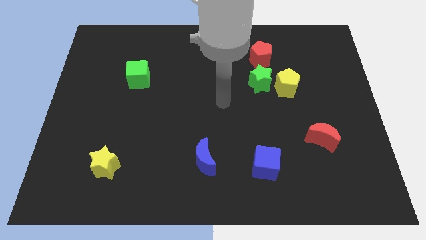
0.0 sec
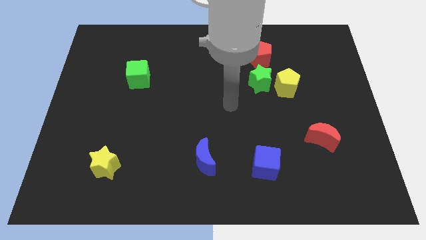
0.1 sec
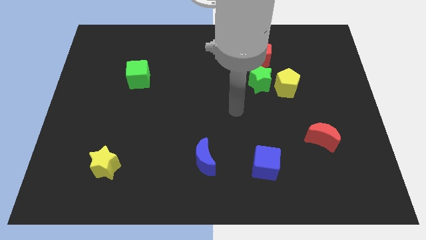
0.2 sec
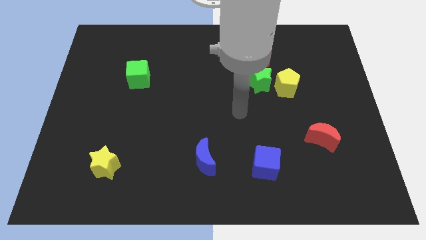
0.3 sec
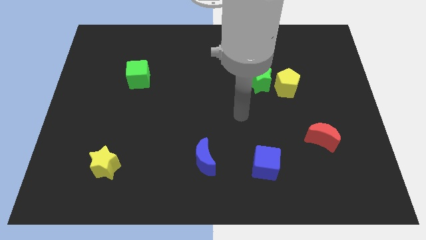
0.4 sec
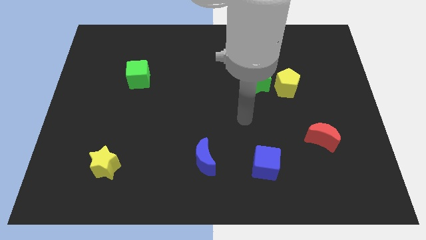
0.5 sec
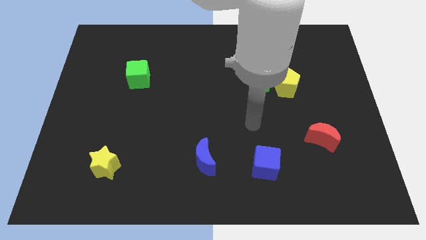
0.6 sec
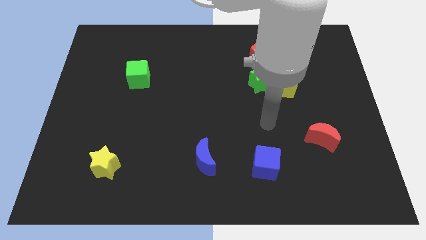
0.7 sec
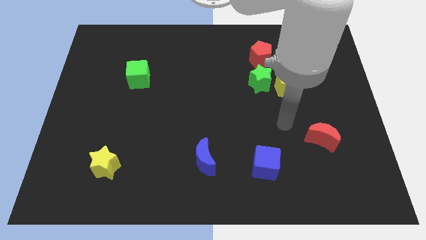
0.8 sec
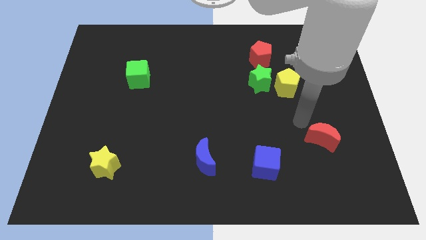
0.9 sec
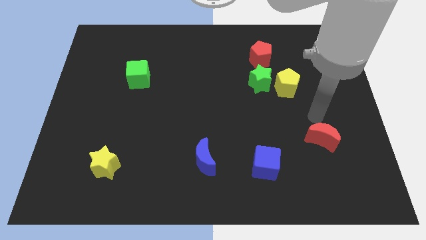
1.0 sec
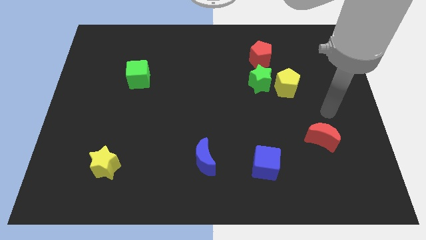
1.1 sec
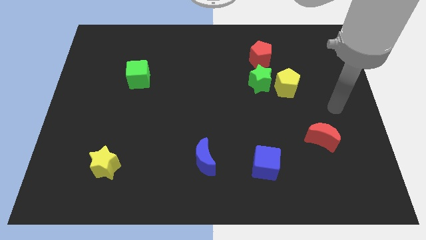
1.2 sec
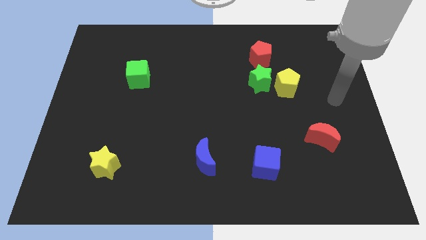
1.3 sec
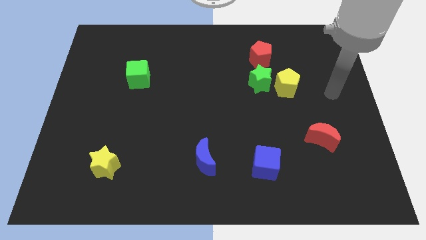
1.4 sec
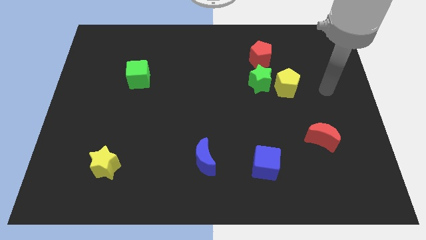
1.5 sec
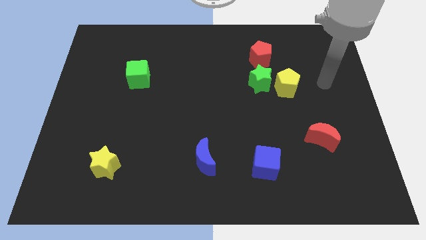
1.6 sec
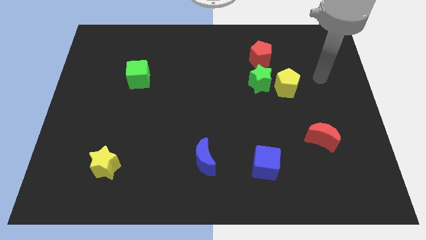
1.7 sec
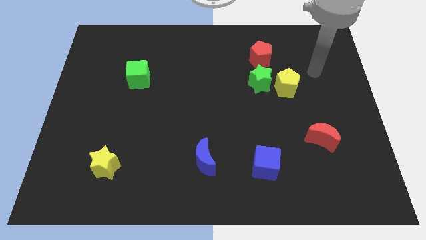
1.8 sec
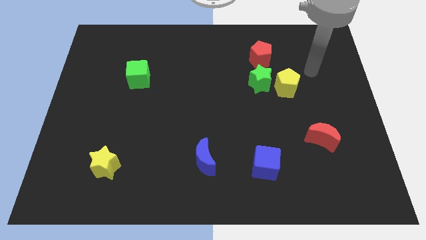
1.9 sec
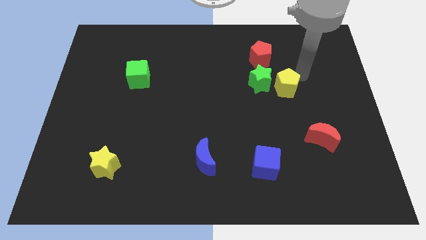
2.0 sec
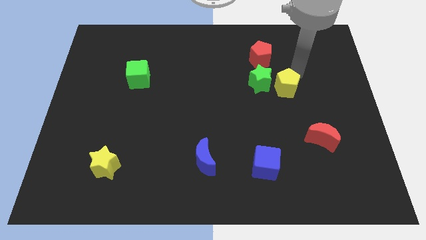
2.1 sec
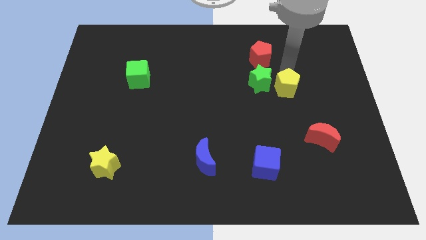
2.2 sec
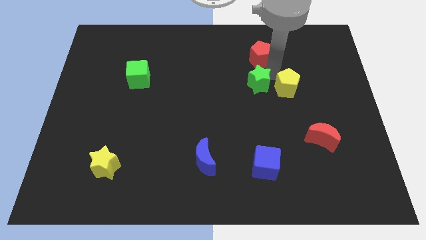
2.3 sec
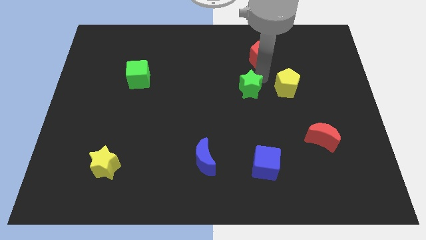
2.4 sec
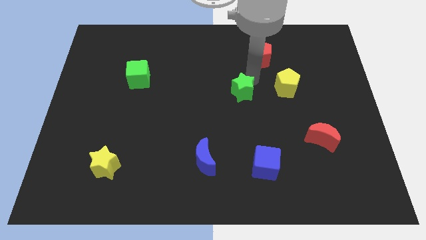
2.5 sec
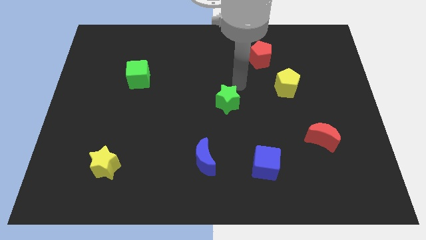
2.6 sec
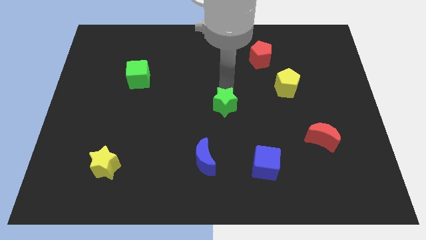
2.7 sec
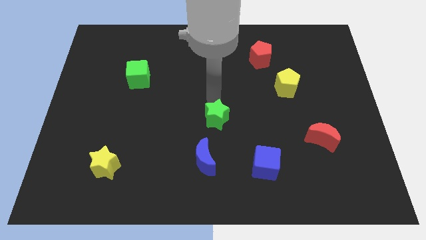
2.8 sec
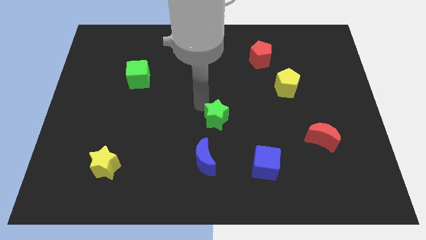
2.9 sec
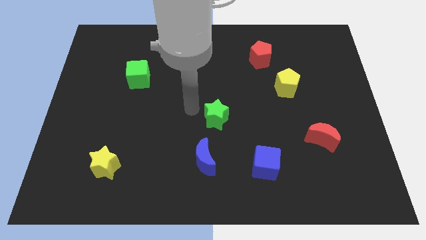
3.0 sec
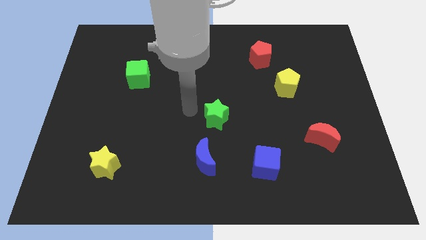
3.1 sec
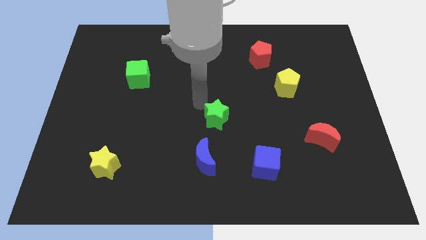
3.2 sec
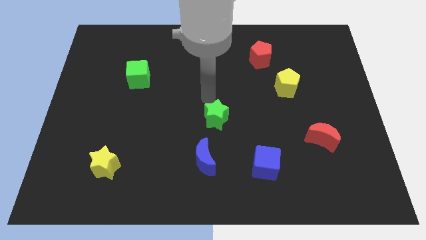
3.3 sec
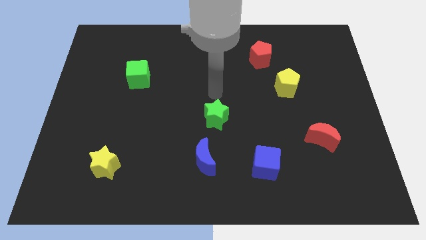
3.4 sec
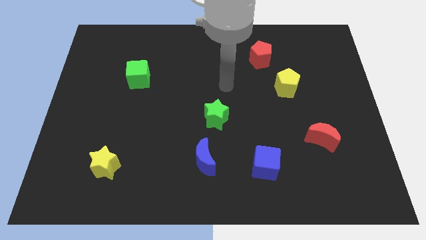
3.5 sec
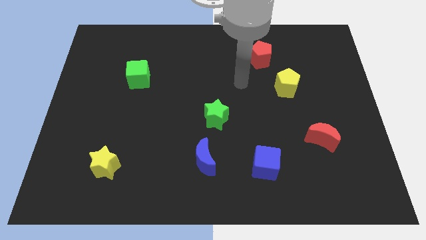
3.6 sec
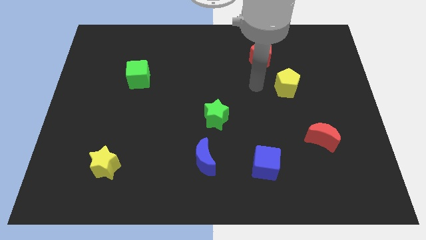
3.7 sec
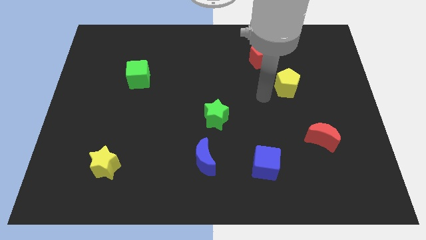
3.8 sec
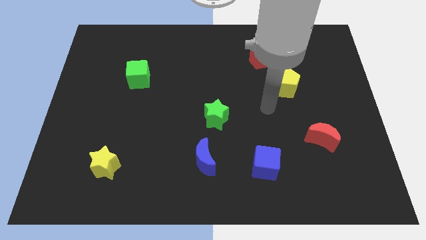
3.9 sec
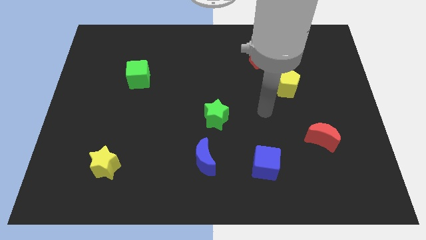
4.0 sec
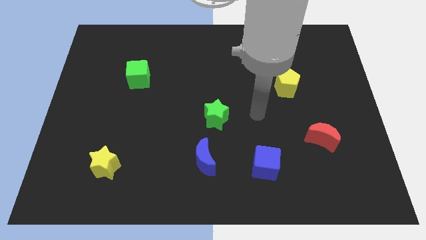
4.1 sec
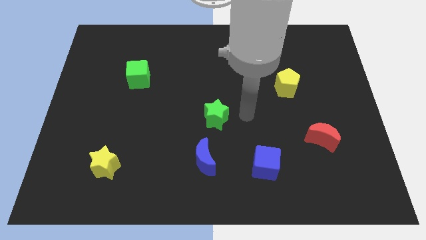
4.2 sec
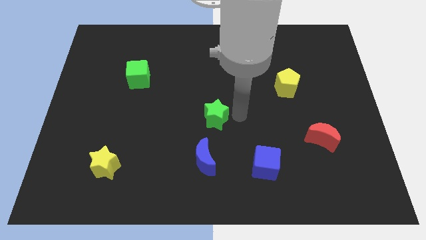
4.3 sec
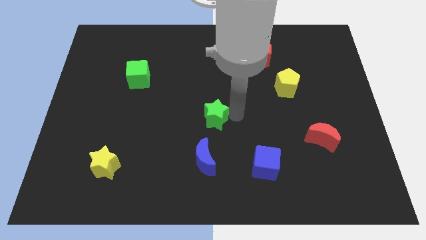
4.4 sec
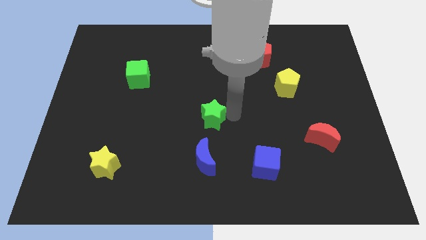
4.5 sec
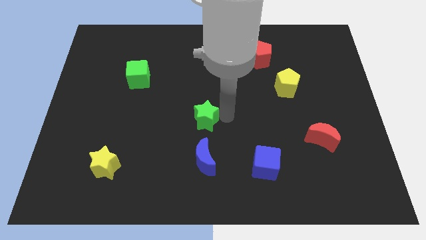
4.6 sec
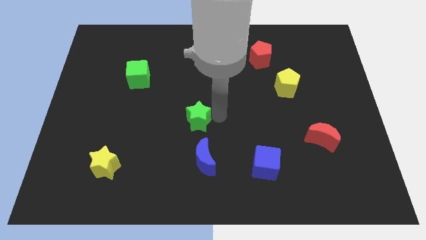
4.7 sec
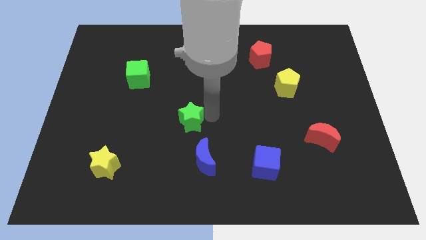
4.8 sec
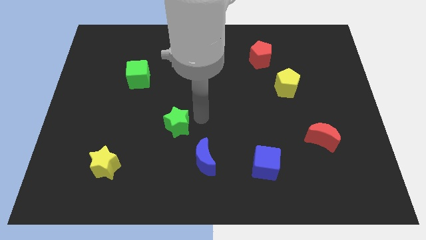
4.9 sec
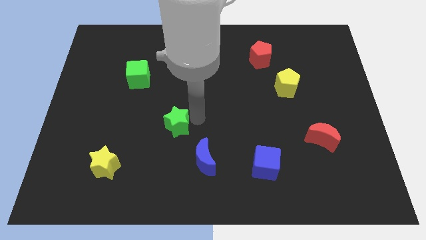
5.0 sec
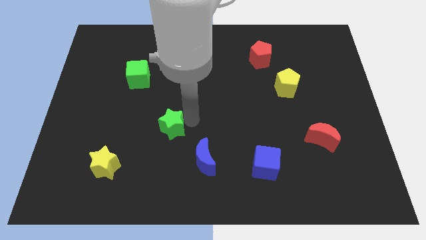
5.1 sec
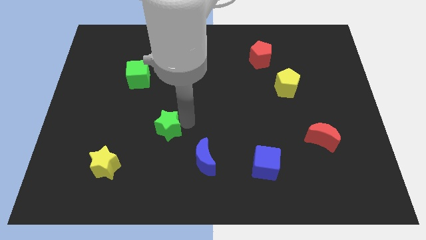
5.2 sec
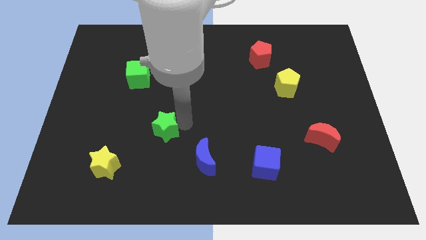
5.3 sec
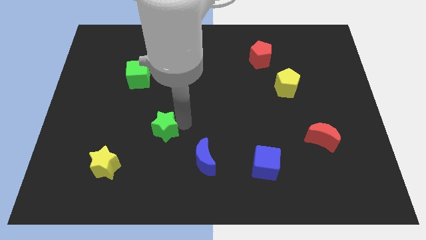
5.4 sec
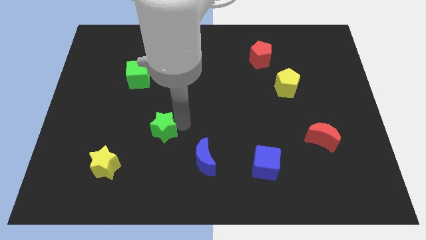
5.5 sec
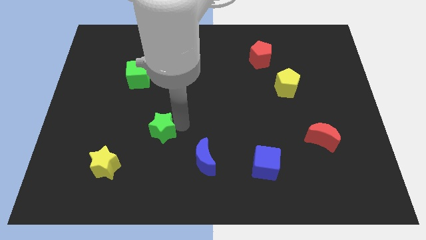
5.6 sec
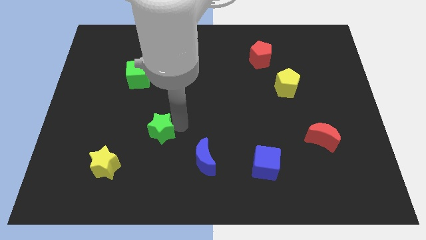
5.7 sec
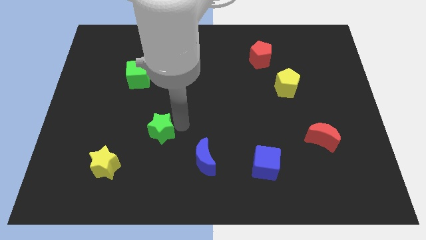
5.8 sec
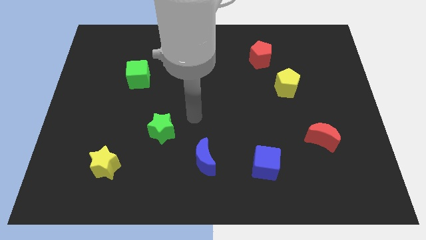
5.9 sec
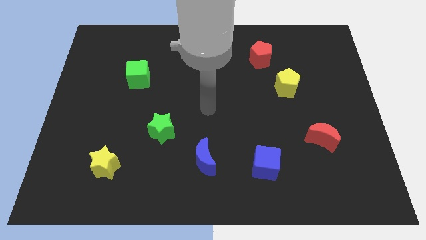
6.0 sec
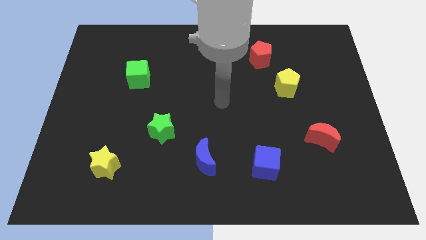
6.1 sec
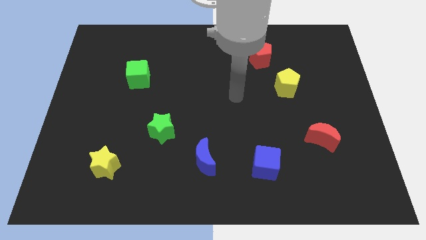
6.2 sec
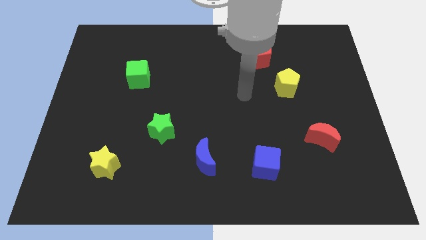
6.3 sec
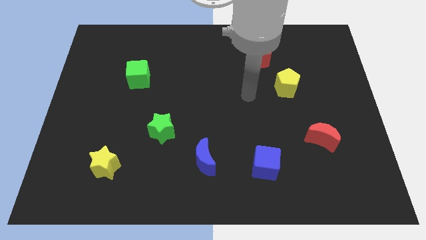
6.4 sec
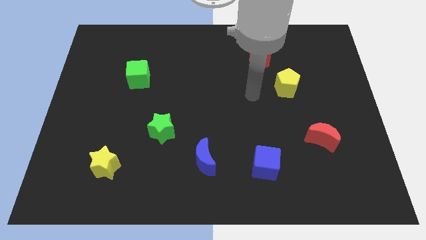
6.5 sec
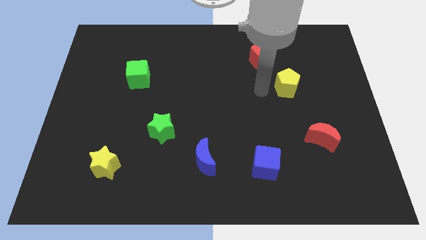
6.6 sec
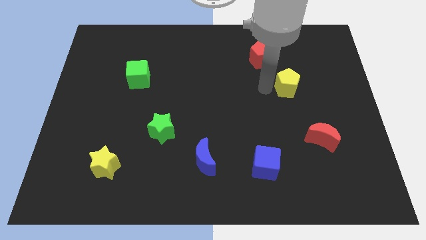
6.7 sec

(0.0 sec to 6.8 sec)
place the green star towards the diagonal top right corner of the yellow star

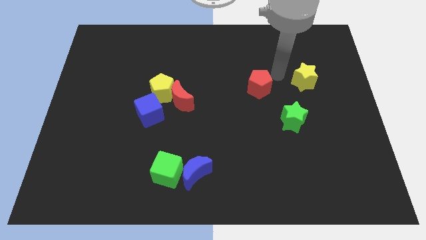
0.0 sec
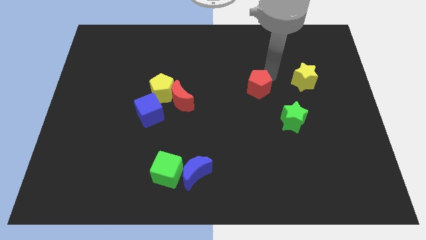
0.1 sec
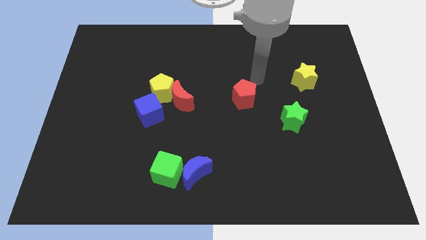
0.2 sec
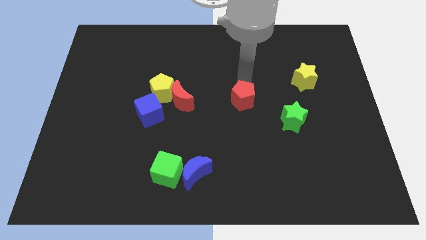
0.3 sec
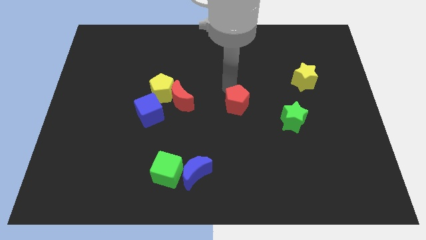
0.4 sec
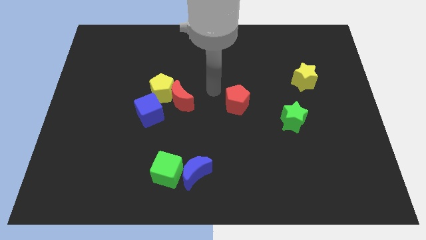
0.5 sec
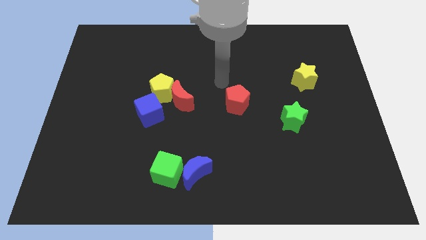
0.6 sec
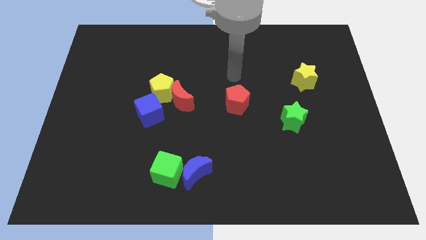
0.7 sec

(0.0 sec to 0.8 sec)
move the red pentagon to the right of the red moon

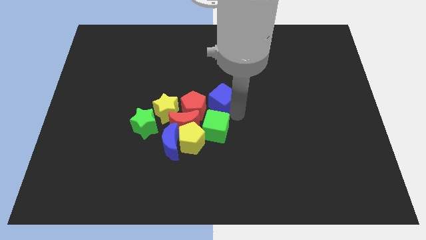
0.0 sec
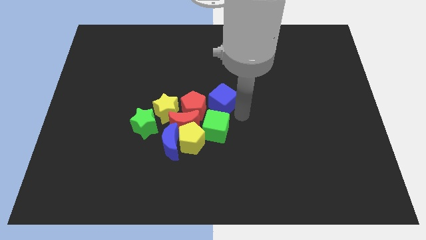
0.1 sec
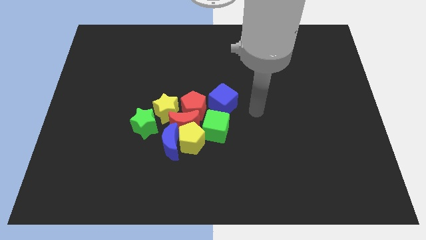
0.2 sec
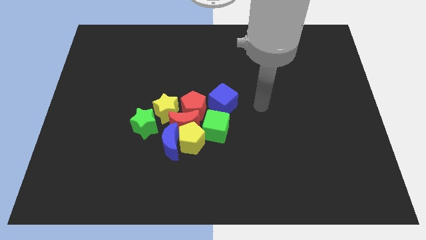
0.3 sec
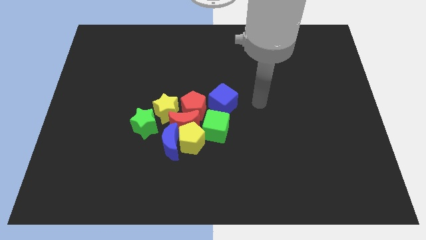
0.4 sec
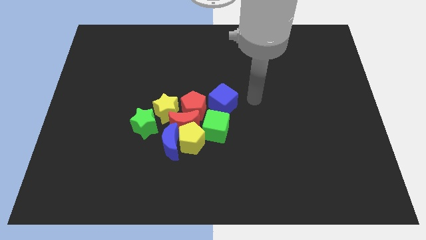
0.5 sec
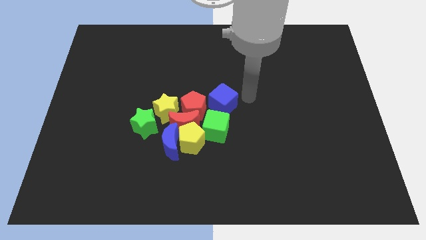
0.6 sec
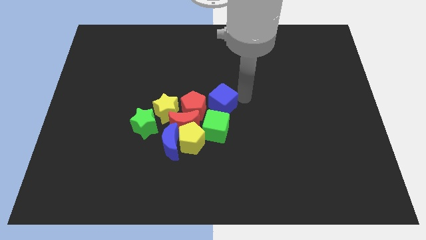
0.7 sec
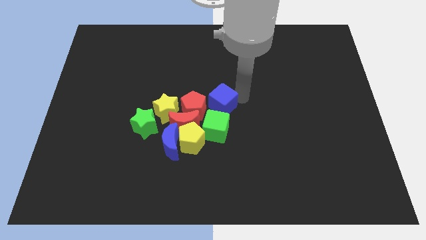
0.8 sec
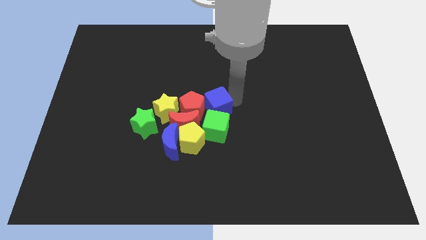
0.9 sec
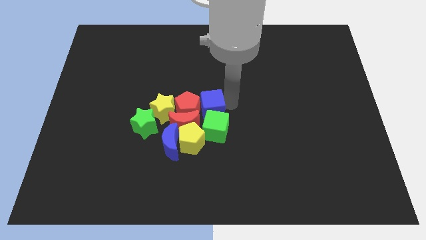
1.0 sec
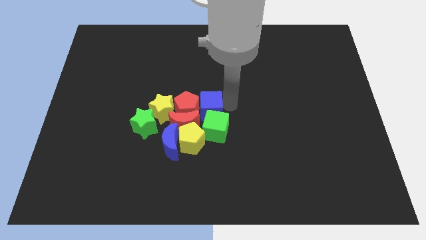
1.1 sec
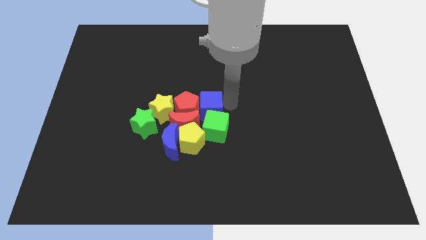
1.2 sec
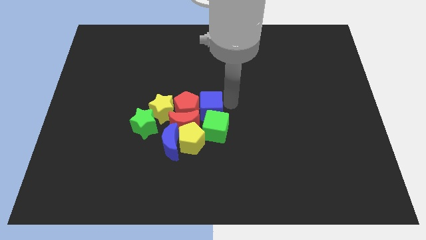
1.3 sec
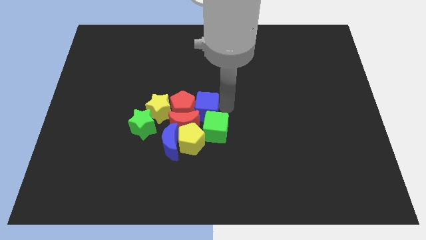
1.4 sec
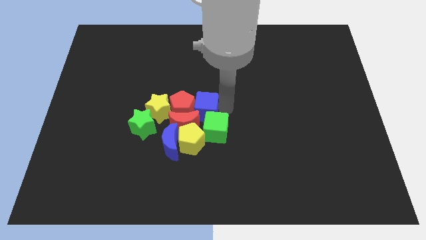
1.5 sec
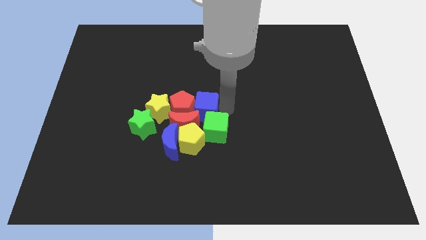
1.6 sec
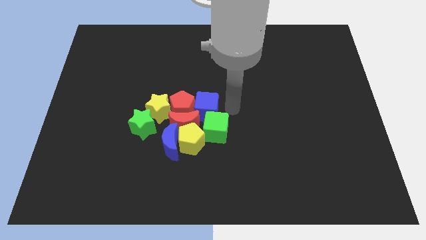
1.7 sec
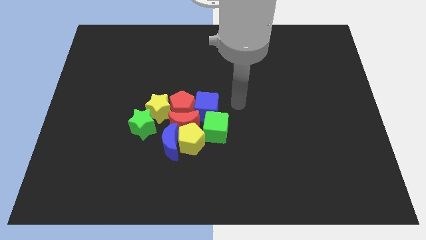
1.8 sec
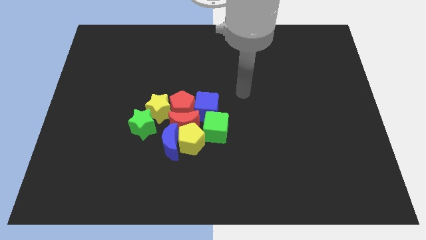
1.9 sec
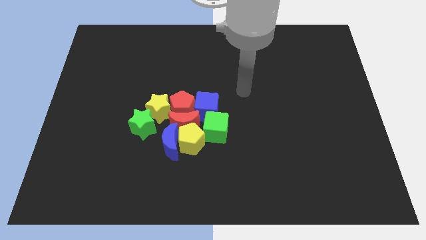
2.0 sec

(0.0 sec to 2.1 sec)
group up all the blocks
